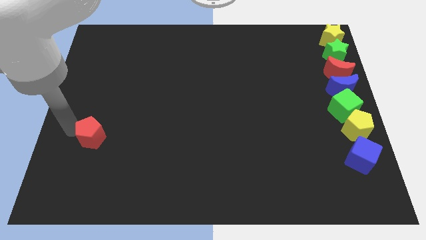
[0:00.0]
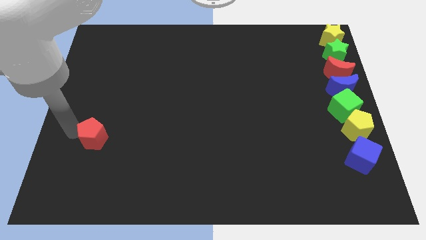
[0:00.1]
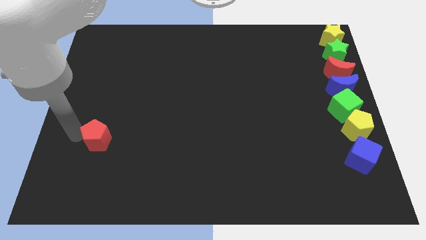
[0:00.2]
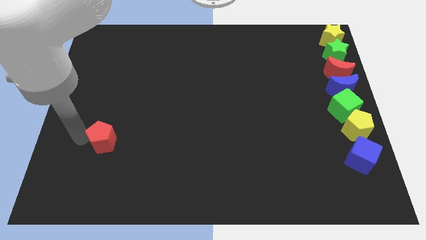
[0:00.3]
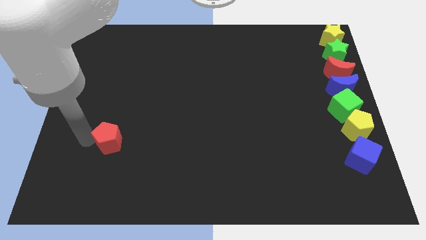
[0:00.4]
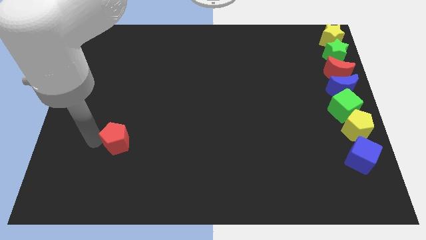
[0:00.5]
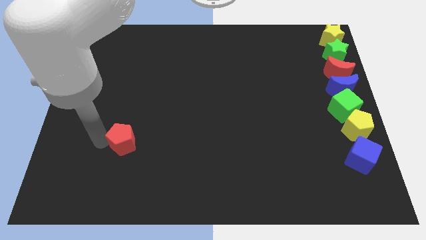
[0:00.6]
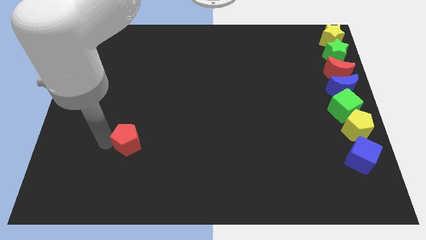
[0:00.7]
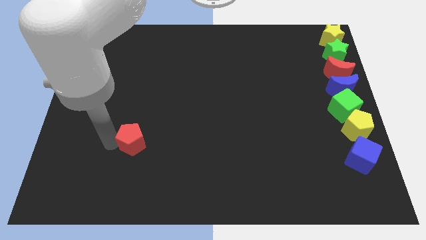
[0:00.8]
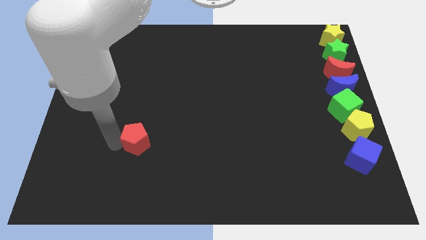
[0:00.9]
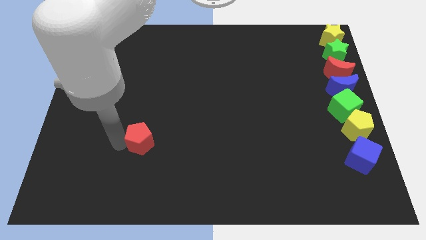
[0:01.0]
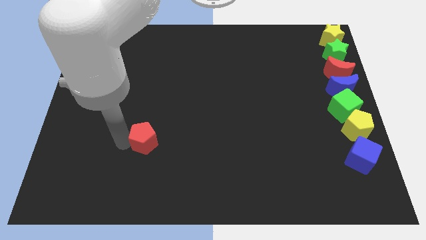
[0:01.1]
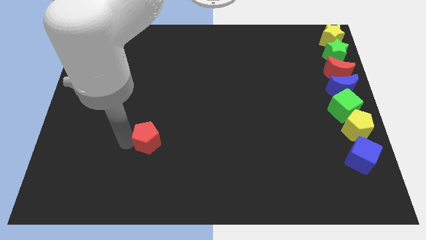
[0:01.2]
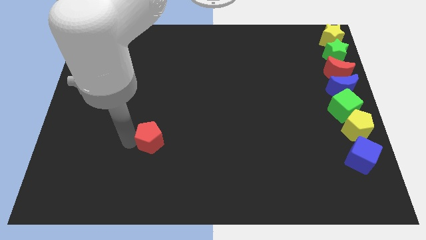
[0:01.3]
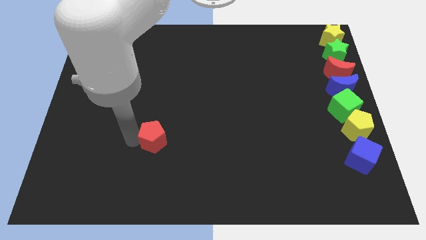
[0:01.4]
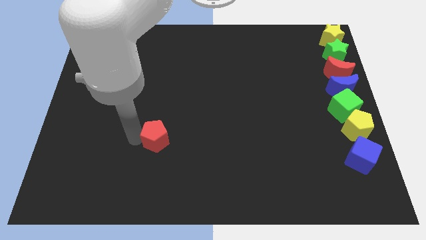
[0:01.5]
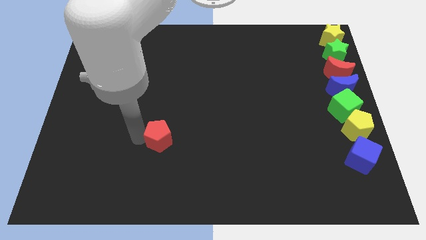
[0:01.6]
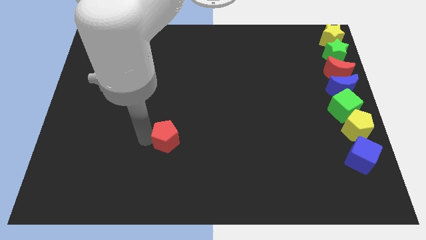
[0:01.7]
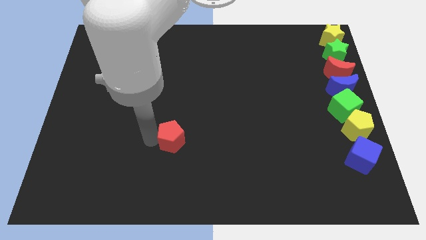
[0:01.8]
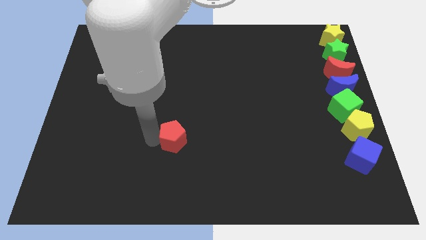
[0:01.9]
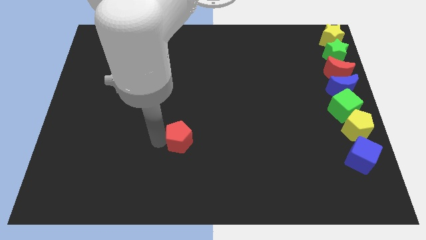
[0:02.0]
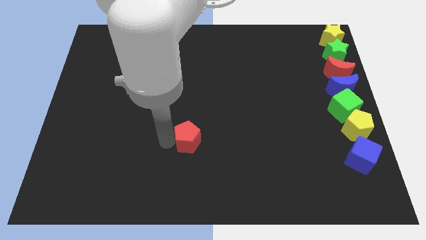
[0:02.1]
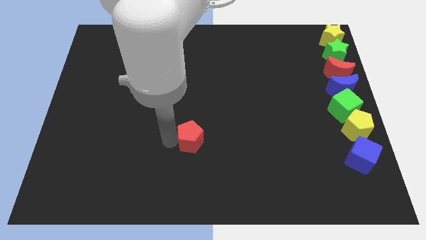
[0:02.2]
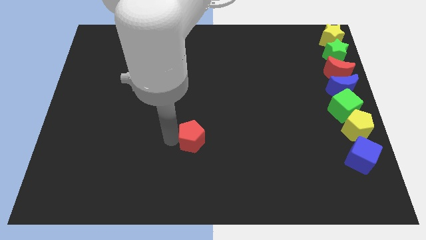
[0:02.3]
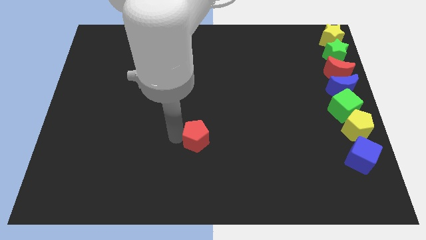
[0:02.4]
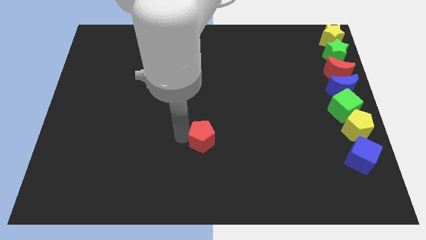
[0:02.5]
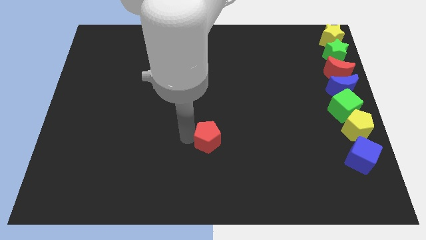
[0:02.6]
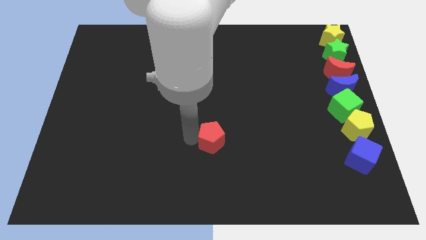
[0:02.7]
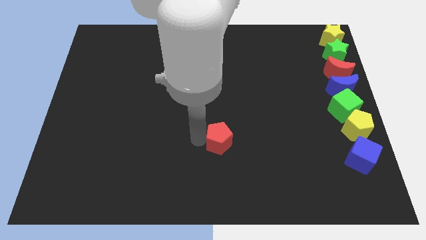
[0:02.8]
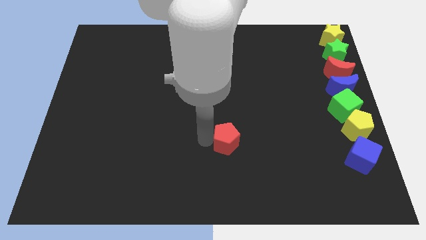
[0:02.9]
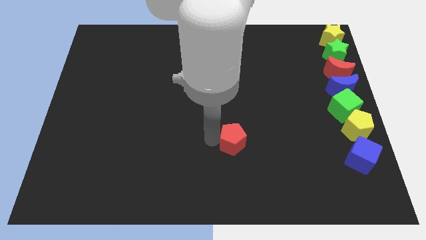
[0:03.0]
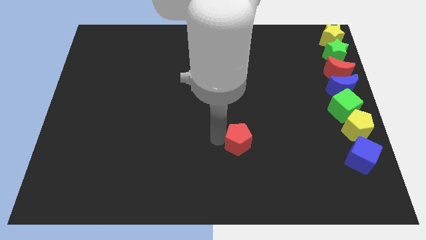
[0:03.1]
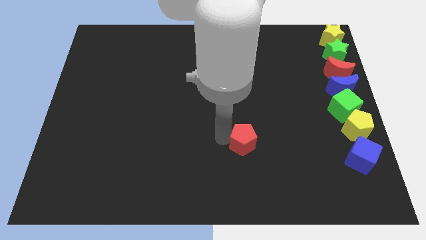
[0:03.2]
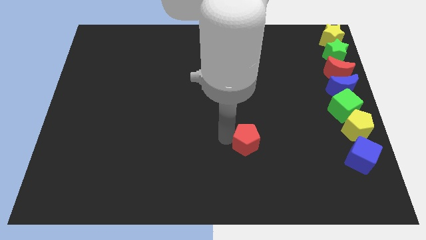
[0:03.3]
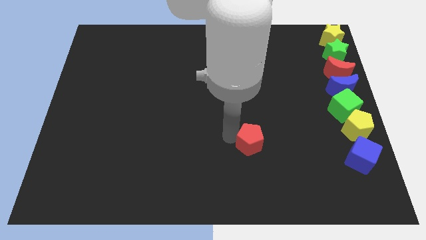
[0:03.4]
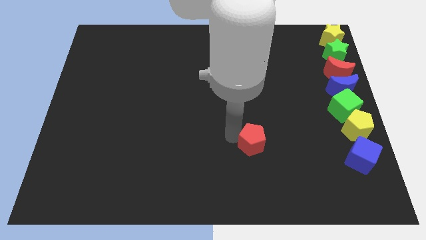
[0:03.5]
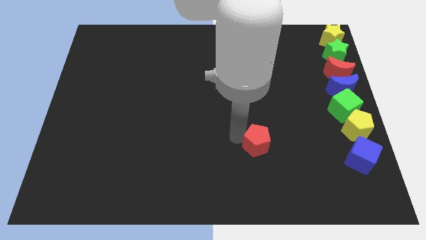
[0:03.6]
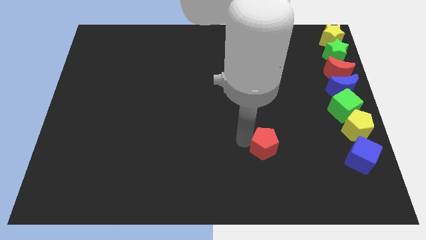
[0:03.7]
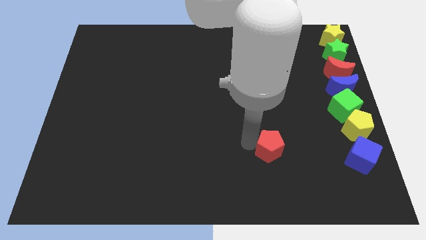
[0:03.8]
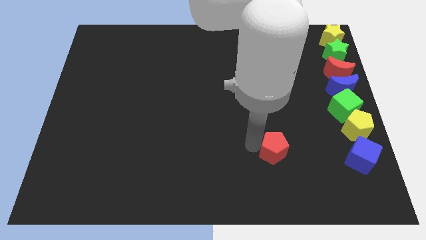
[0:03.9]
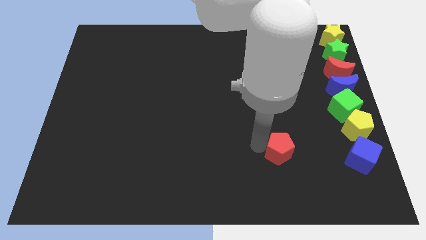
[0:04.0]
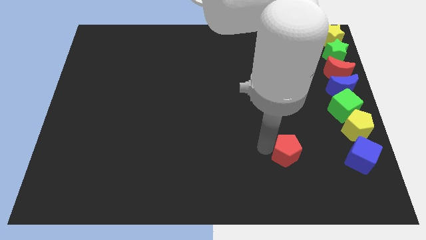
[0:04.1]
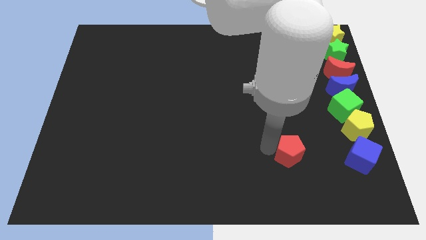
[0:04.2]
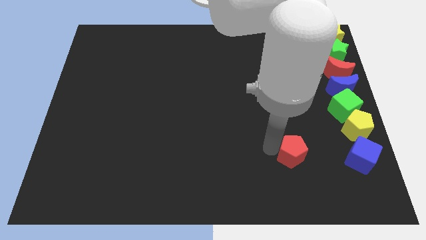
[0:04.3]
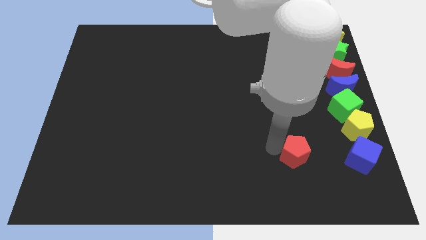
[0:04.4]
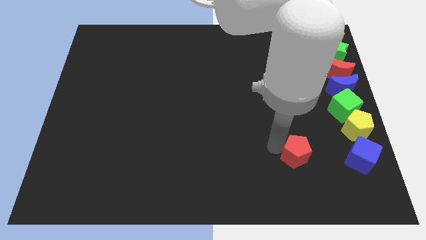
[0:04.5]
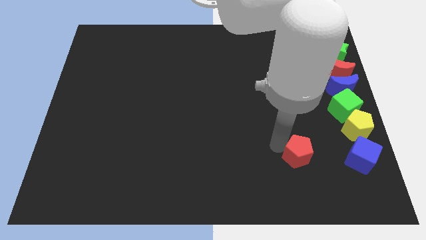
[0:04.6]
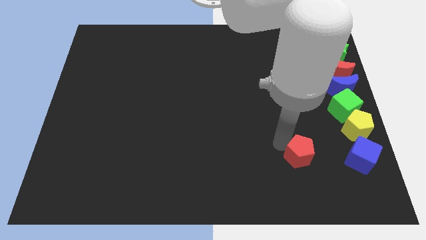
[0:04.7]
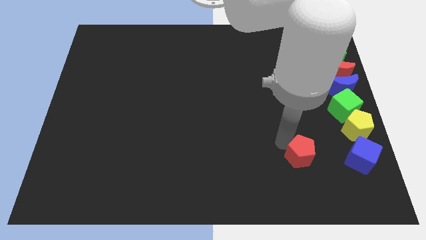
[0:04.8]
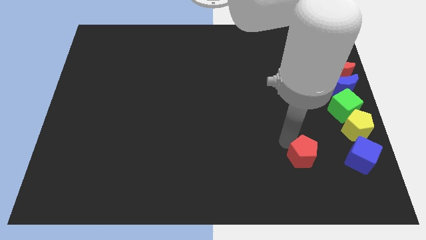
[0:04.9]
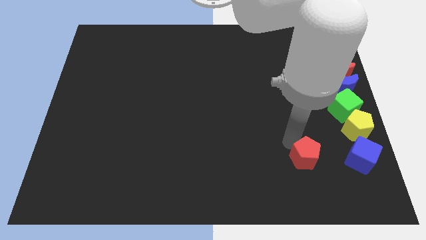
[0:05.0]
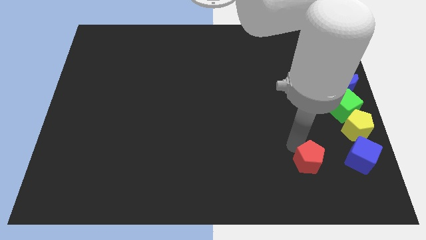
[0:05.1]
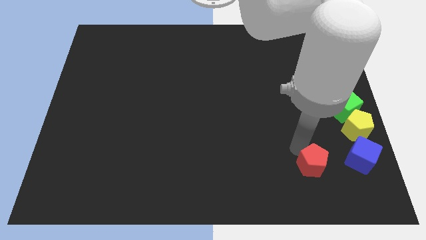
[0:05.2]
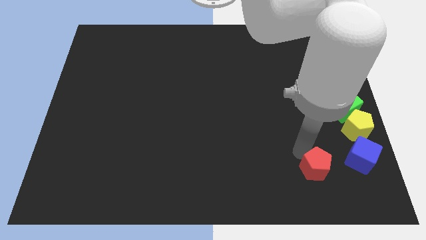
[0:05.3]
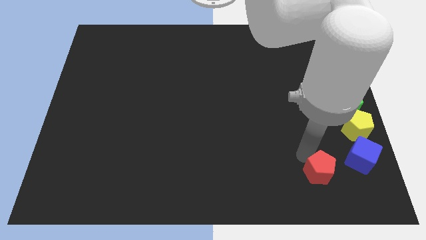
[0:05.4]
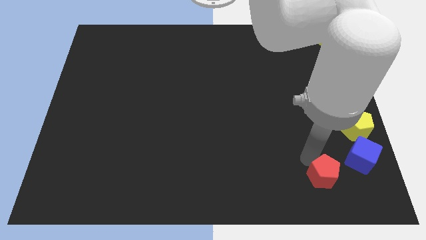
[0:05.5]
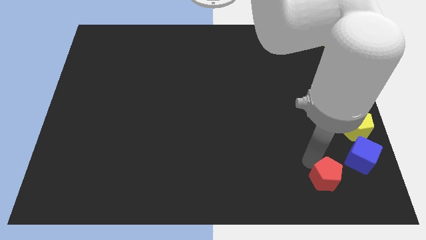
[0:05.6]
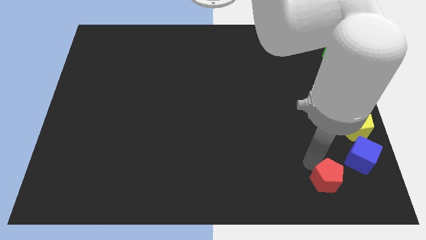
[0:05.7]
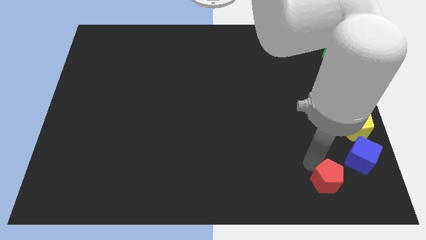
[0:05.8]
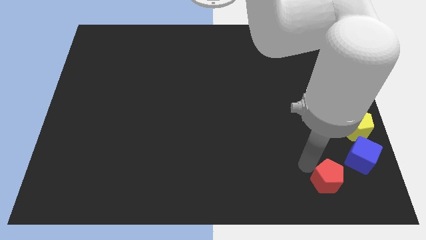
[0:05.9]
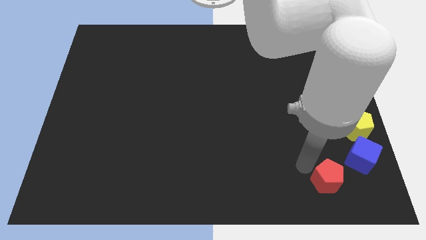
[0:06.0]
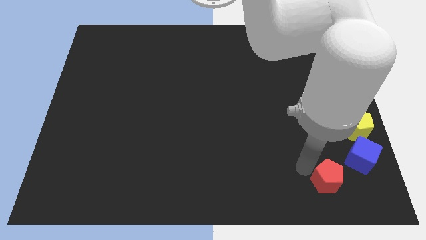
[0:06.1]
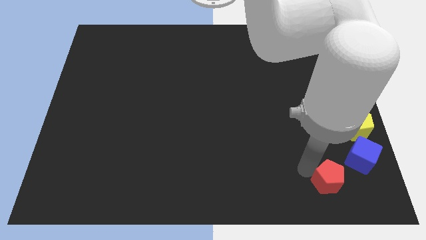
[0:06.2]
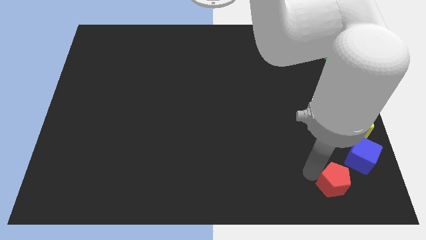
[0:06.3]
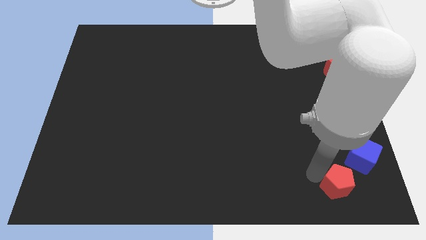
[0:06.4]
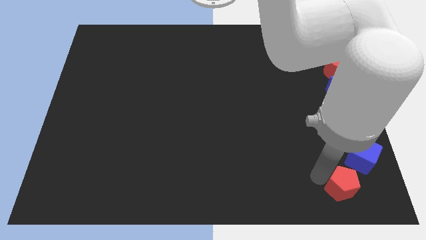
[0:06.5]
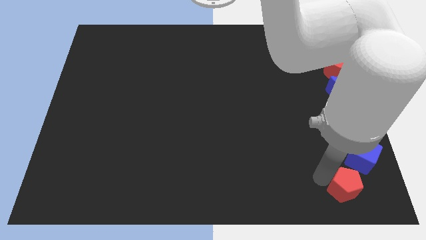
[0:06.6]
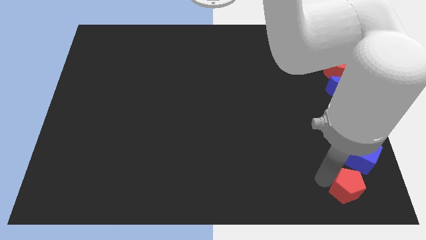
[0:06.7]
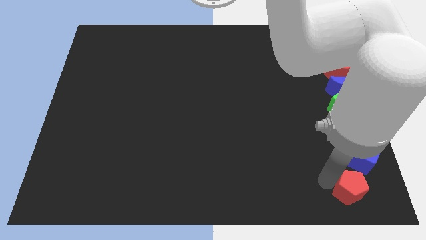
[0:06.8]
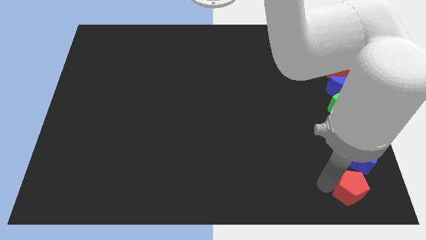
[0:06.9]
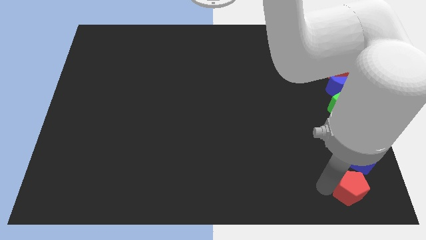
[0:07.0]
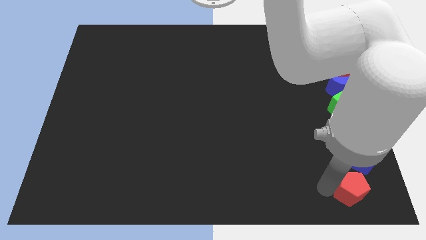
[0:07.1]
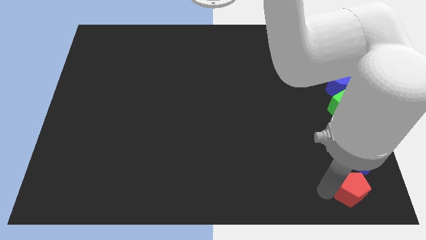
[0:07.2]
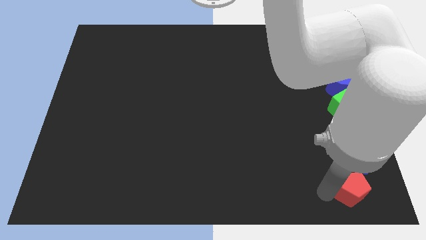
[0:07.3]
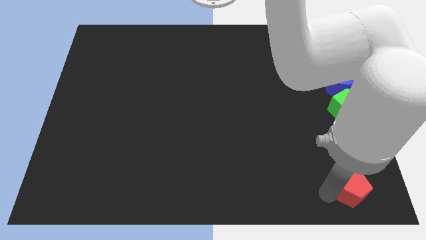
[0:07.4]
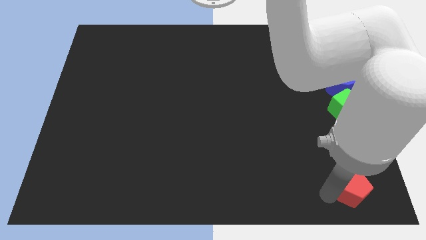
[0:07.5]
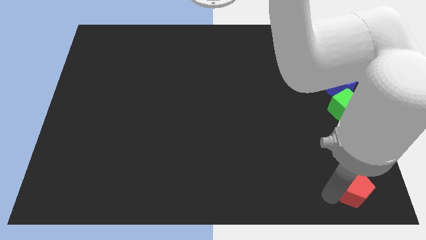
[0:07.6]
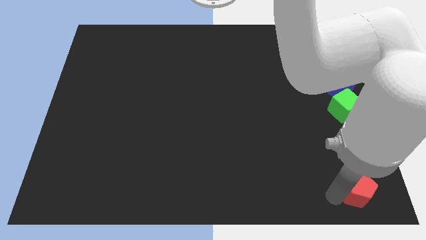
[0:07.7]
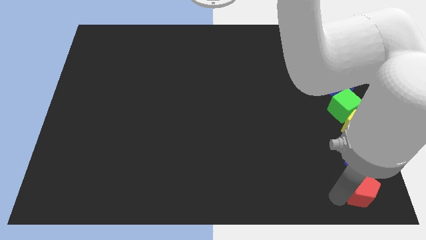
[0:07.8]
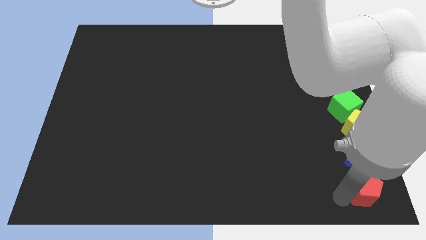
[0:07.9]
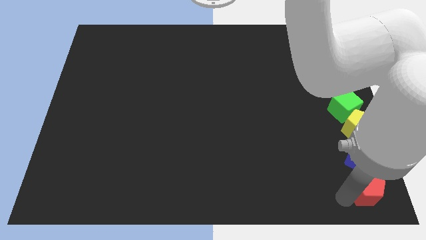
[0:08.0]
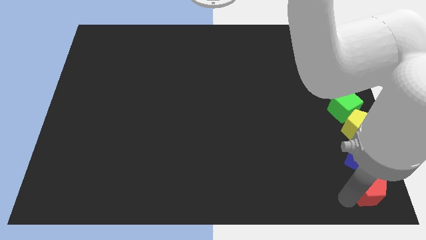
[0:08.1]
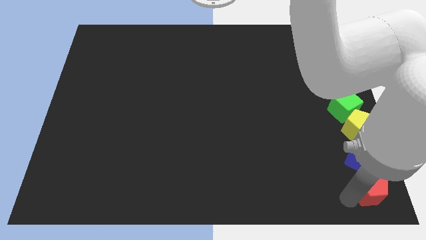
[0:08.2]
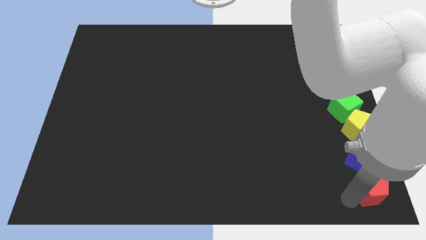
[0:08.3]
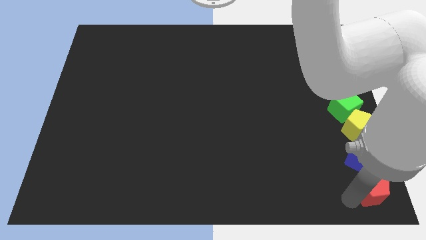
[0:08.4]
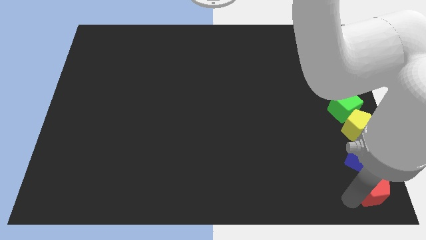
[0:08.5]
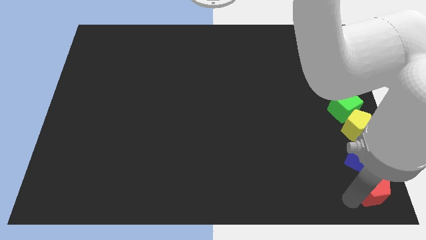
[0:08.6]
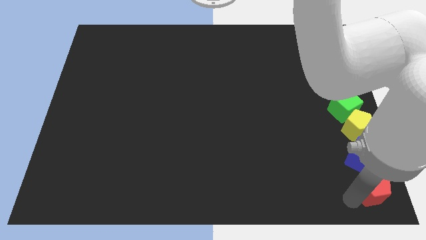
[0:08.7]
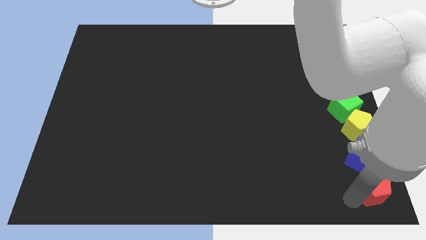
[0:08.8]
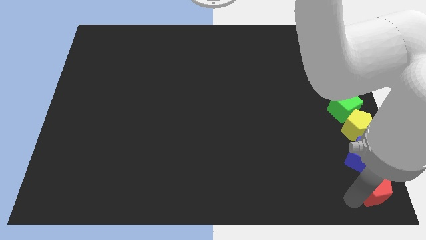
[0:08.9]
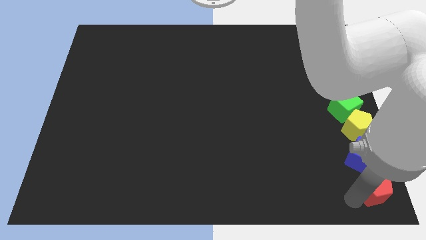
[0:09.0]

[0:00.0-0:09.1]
push the red pentagon to the bottom right
